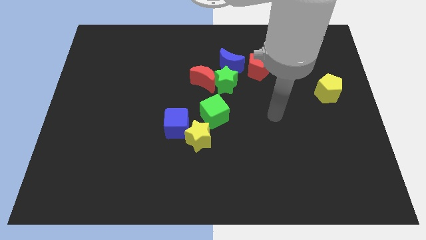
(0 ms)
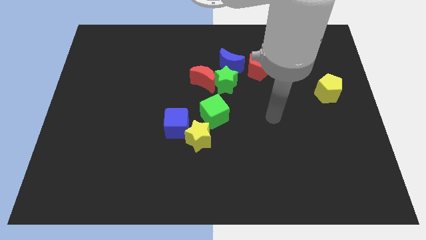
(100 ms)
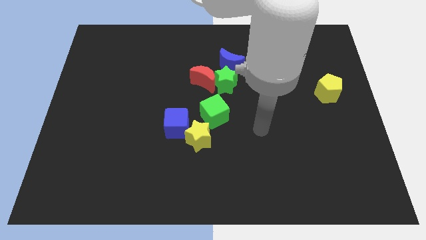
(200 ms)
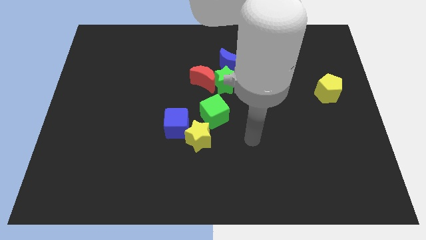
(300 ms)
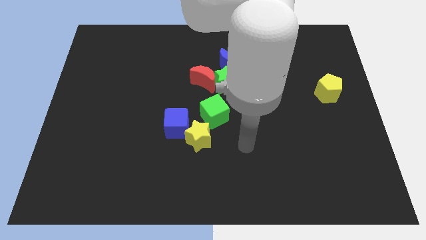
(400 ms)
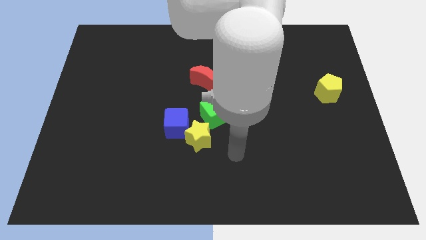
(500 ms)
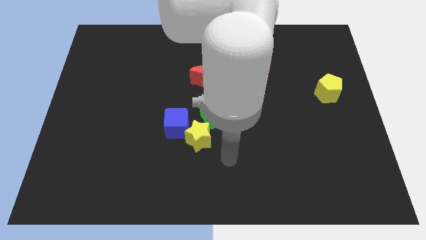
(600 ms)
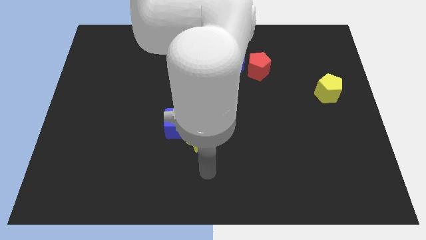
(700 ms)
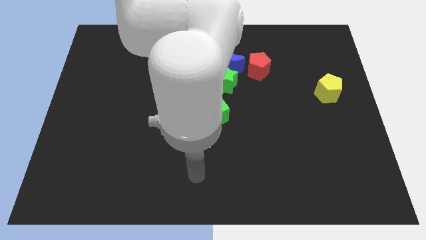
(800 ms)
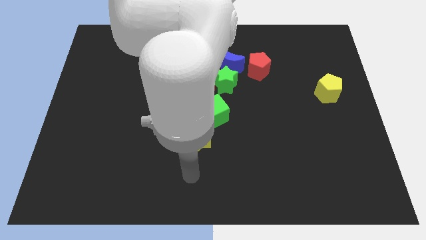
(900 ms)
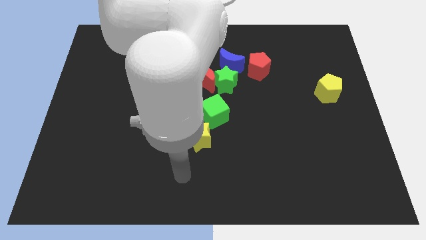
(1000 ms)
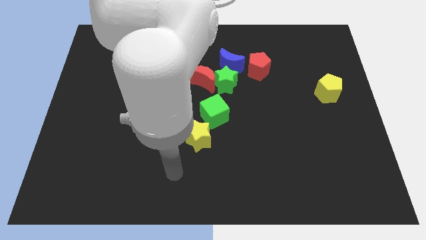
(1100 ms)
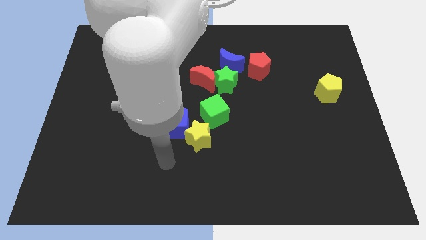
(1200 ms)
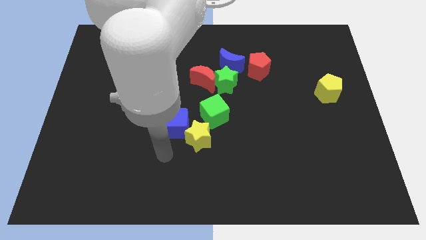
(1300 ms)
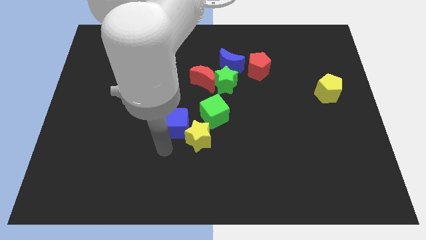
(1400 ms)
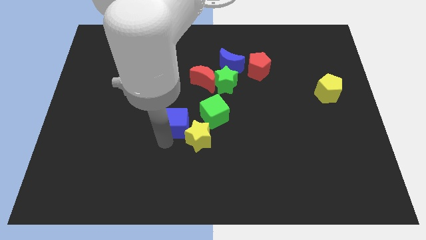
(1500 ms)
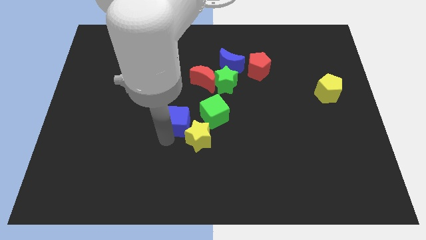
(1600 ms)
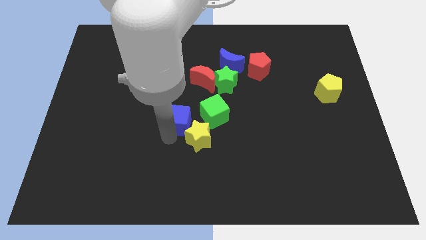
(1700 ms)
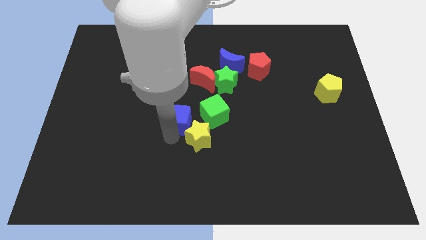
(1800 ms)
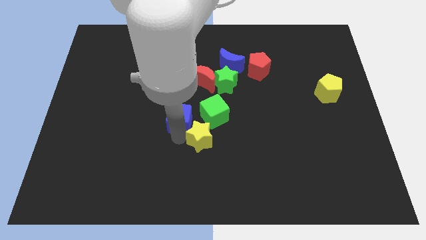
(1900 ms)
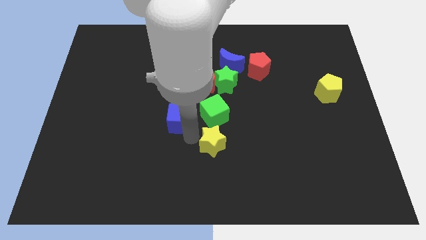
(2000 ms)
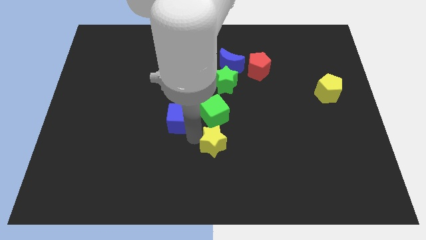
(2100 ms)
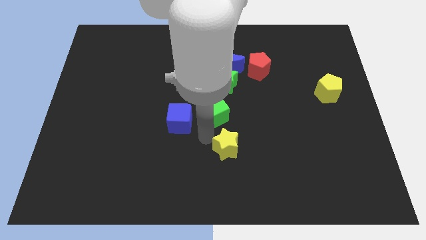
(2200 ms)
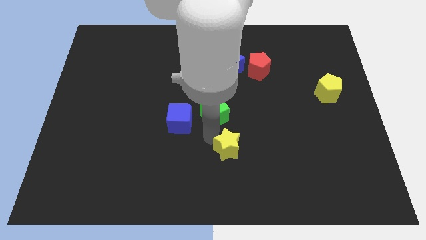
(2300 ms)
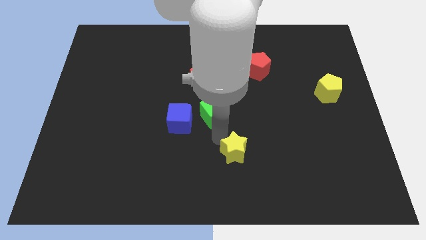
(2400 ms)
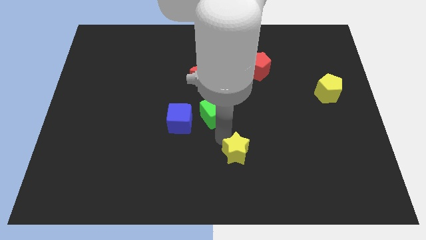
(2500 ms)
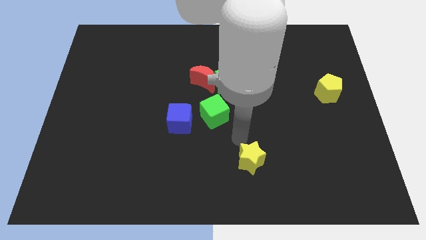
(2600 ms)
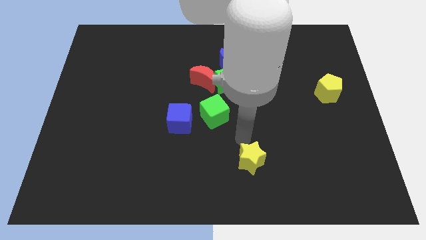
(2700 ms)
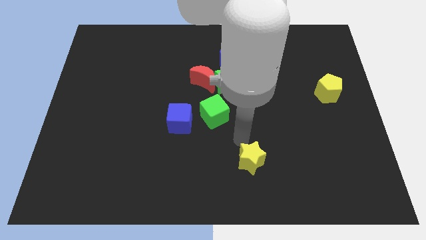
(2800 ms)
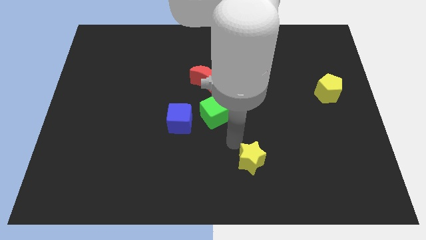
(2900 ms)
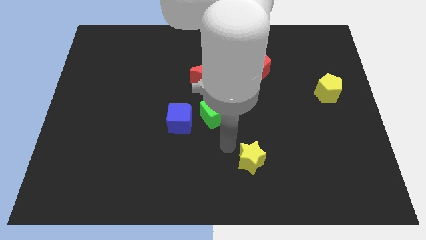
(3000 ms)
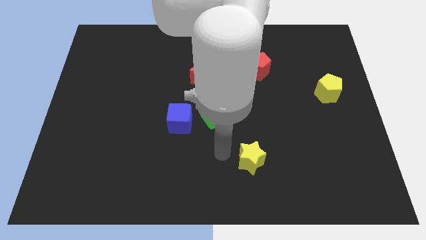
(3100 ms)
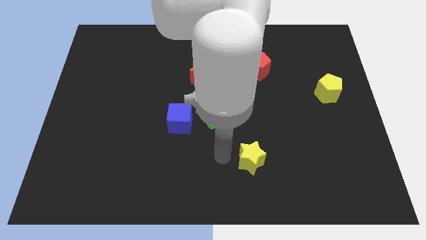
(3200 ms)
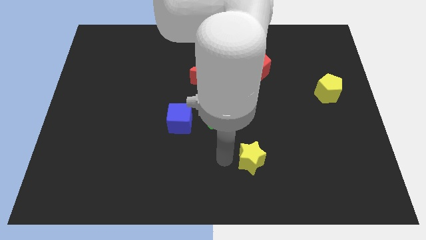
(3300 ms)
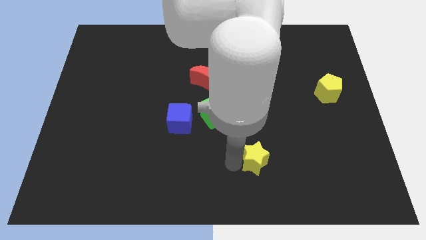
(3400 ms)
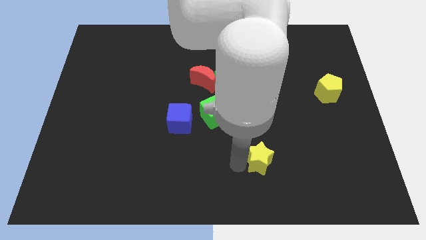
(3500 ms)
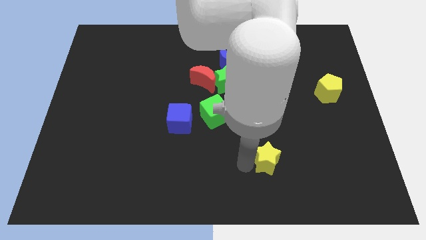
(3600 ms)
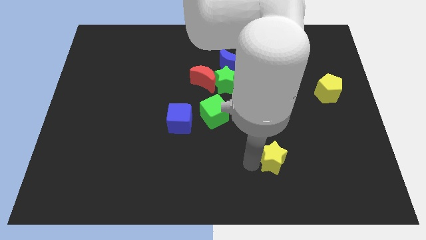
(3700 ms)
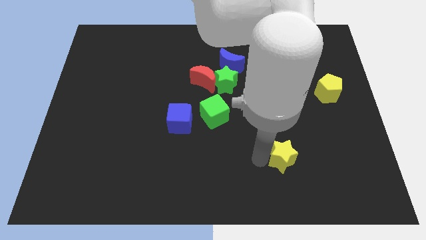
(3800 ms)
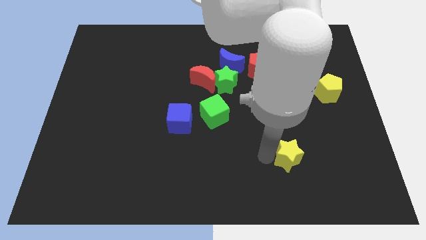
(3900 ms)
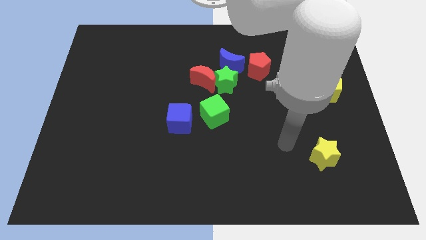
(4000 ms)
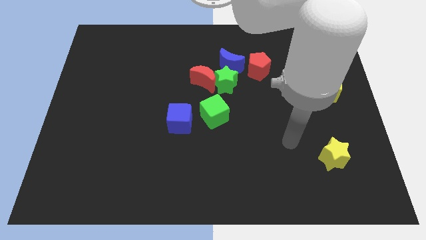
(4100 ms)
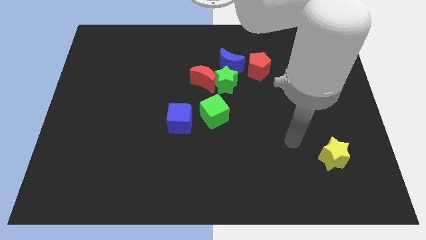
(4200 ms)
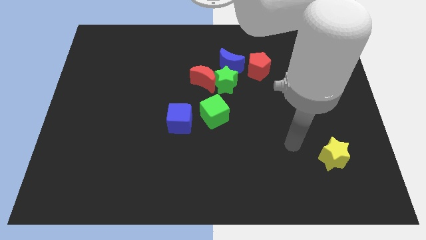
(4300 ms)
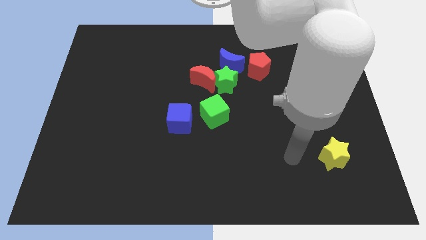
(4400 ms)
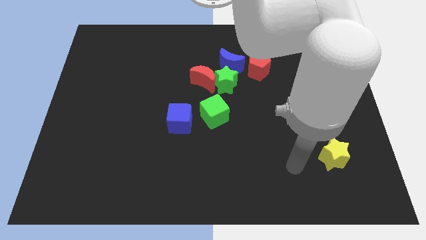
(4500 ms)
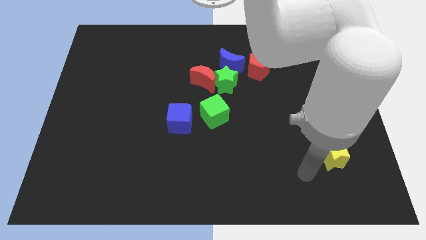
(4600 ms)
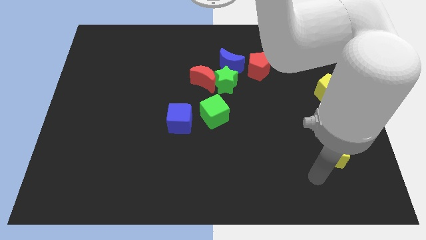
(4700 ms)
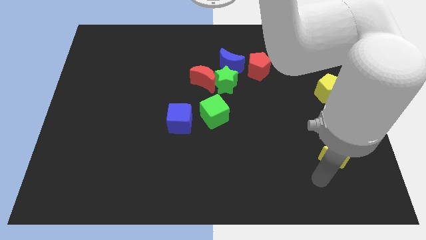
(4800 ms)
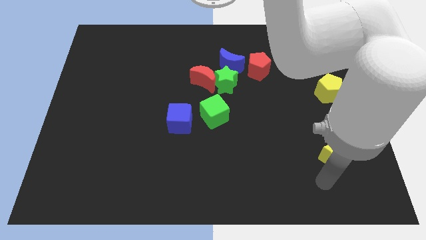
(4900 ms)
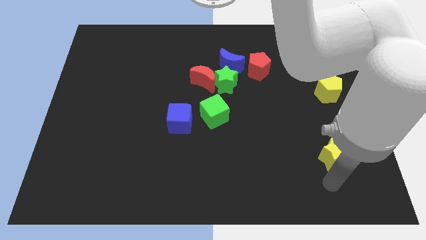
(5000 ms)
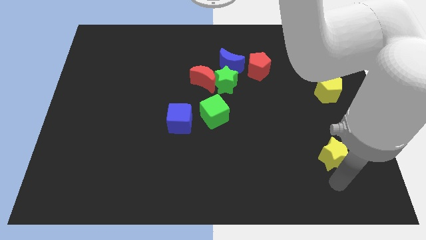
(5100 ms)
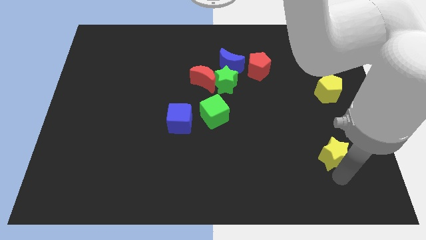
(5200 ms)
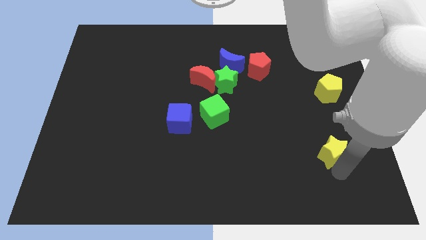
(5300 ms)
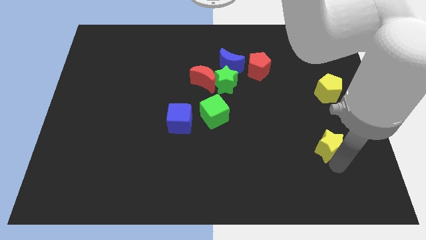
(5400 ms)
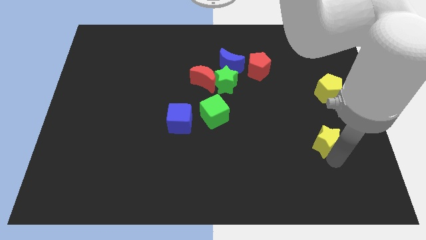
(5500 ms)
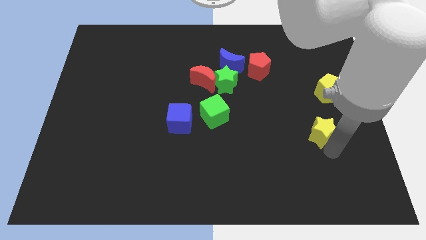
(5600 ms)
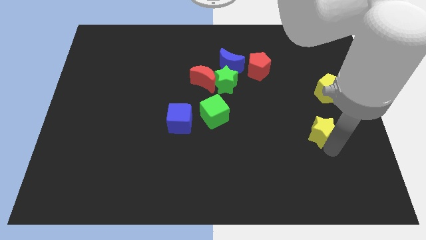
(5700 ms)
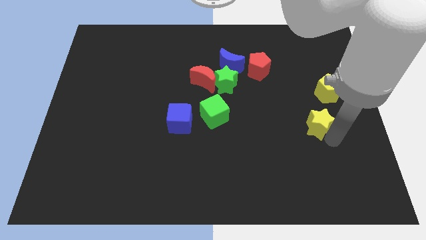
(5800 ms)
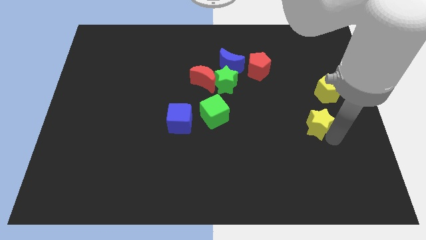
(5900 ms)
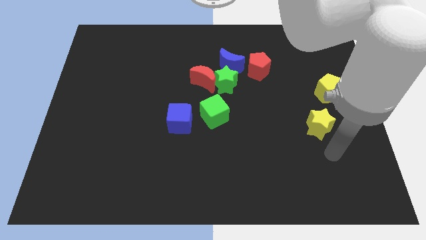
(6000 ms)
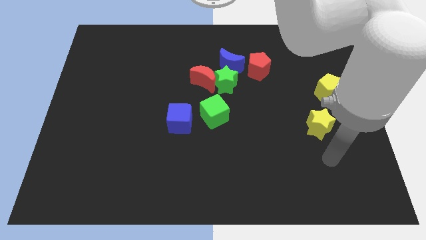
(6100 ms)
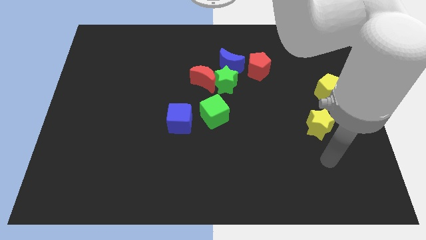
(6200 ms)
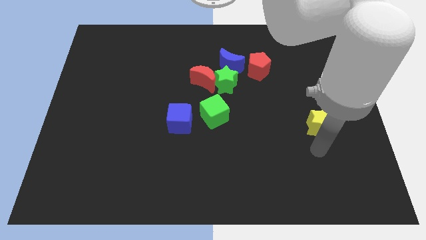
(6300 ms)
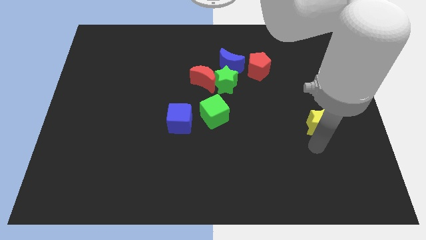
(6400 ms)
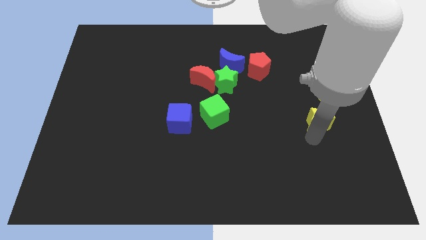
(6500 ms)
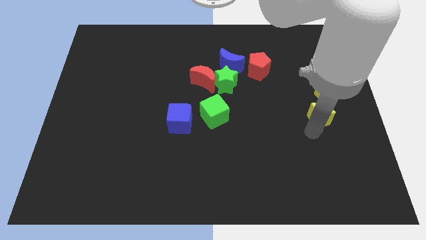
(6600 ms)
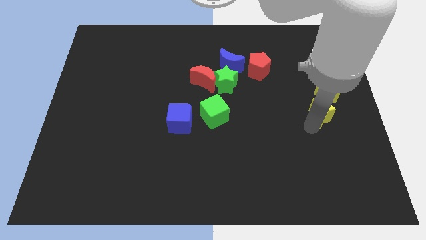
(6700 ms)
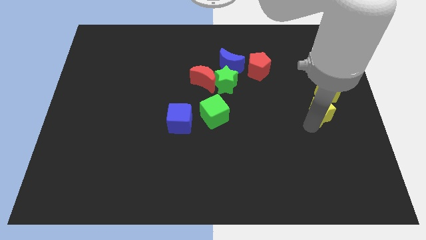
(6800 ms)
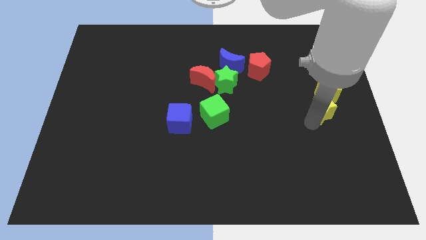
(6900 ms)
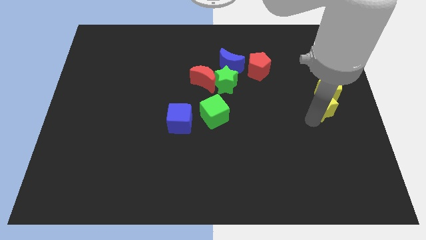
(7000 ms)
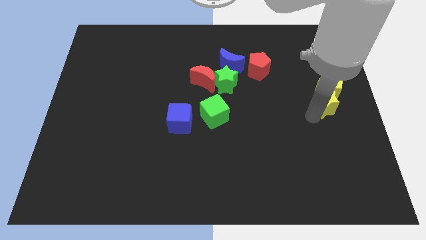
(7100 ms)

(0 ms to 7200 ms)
put the yellow star towards the yellow pentagon

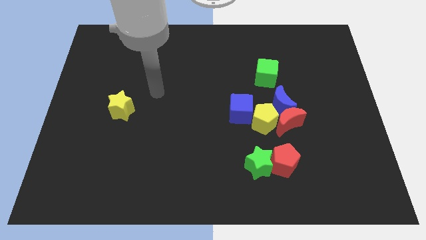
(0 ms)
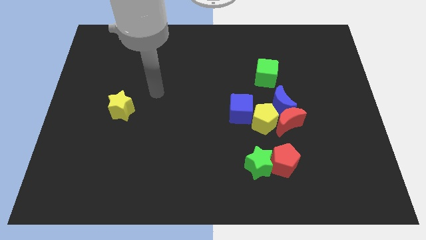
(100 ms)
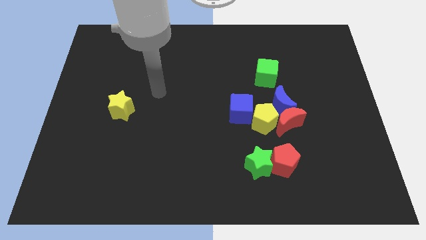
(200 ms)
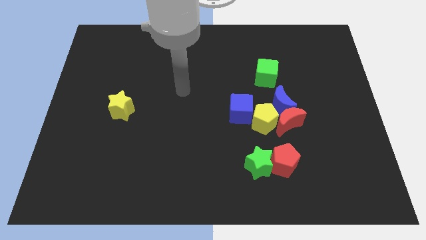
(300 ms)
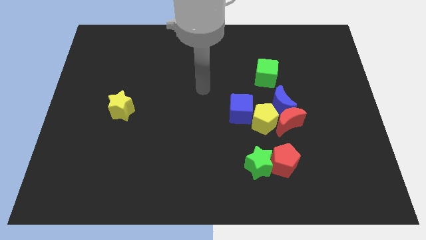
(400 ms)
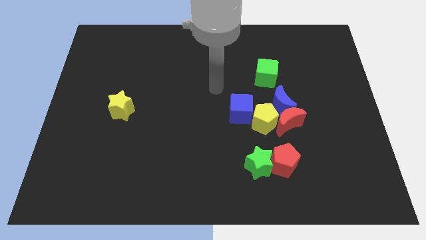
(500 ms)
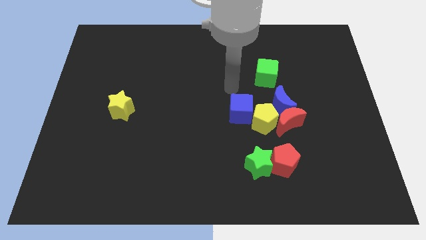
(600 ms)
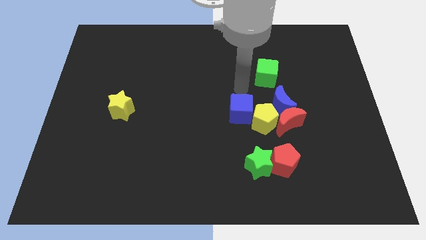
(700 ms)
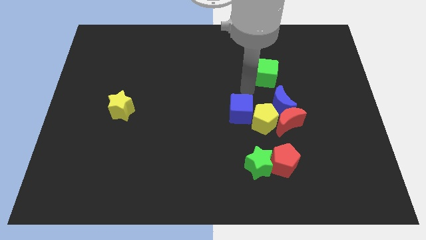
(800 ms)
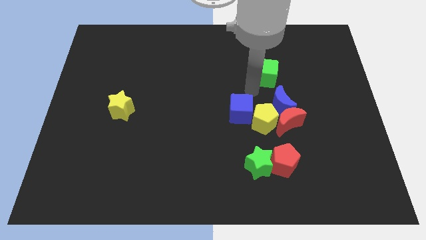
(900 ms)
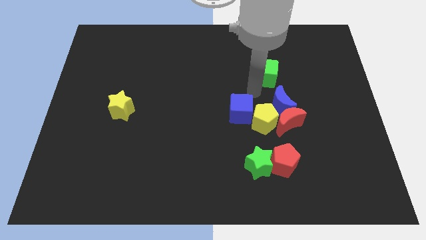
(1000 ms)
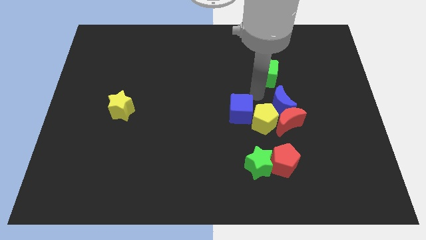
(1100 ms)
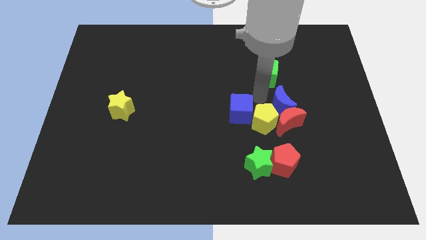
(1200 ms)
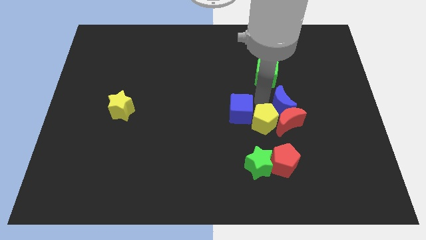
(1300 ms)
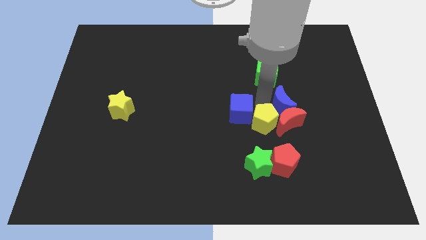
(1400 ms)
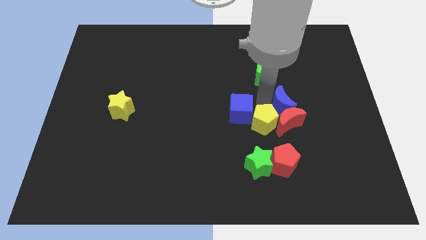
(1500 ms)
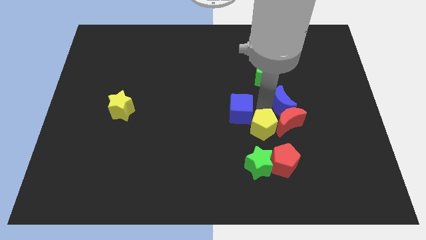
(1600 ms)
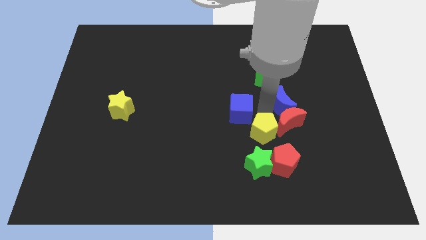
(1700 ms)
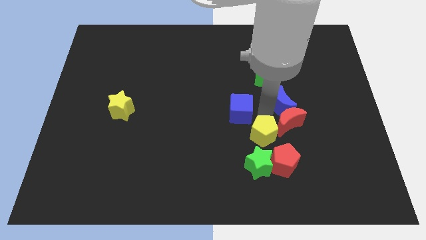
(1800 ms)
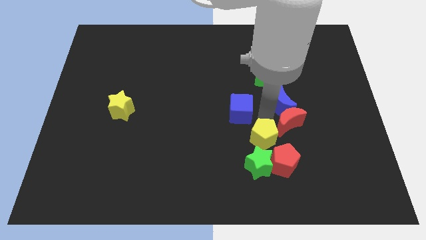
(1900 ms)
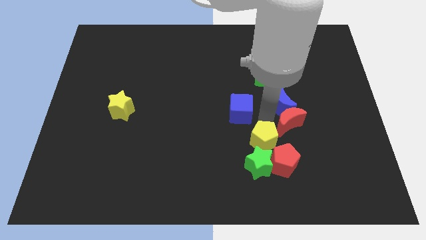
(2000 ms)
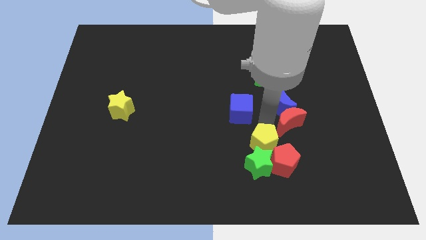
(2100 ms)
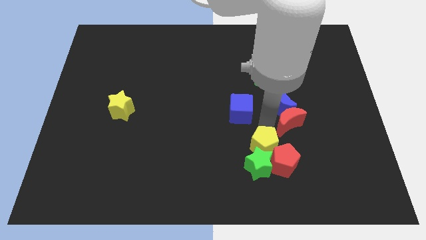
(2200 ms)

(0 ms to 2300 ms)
push the yellow pentagon close to the green star
